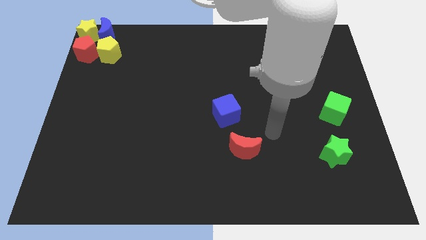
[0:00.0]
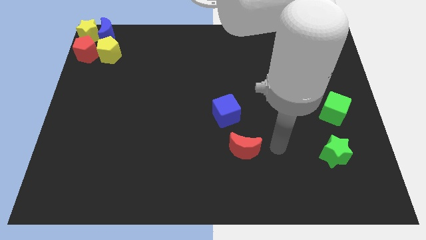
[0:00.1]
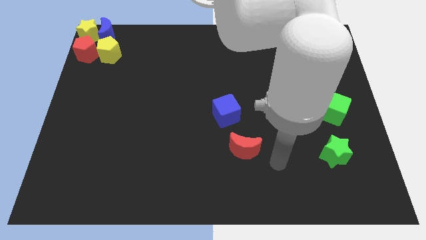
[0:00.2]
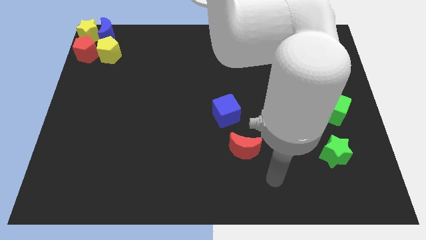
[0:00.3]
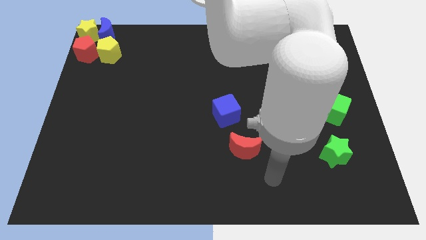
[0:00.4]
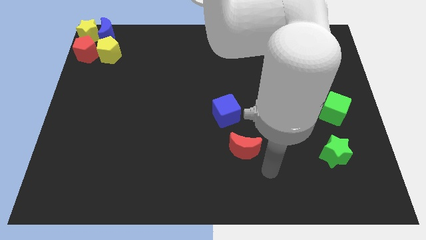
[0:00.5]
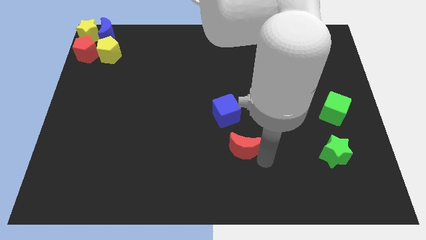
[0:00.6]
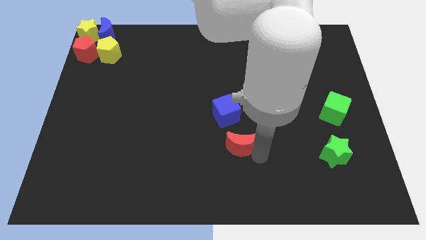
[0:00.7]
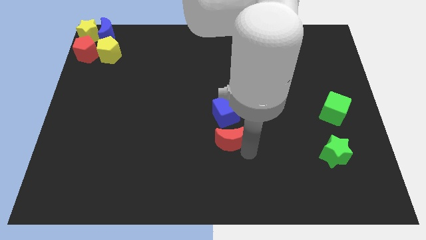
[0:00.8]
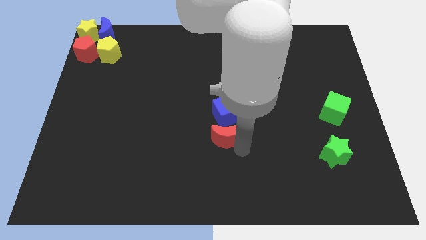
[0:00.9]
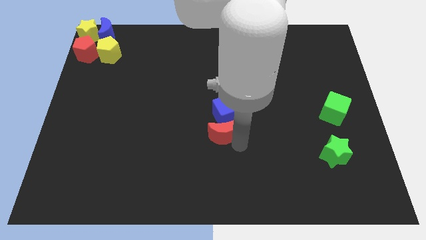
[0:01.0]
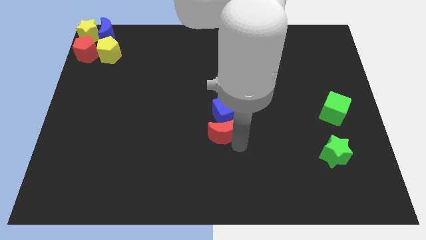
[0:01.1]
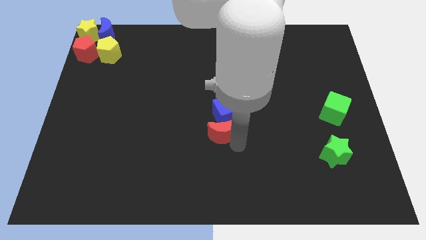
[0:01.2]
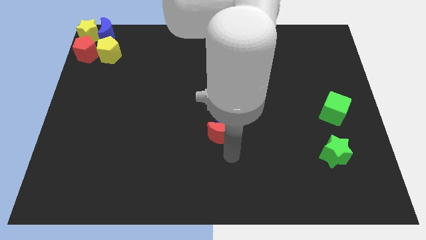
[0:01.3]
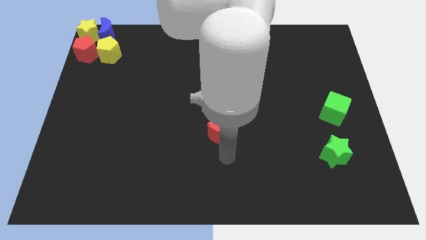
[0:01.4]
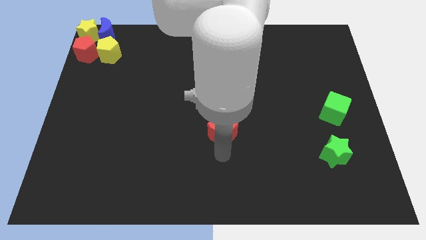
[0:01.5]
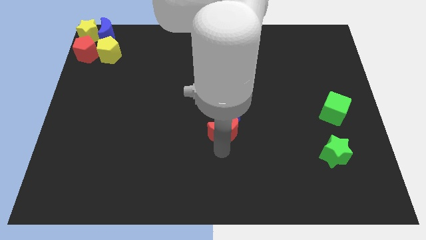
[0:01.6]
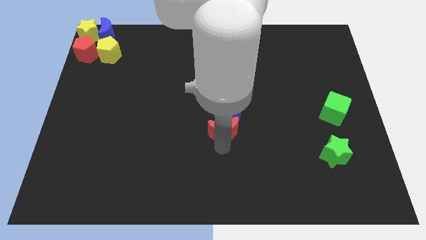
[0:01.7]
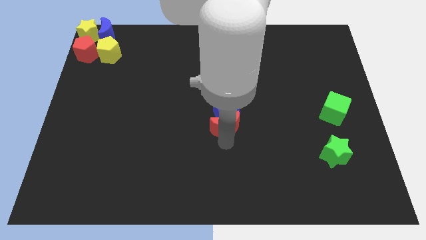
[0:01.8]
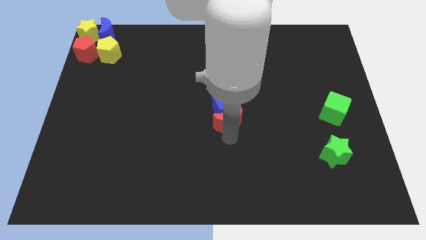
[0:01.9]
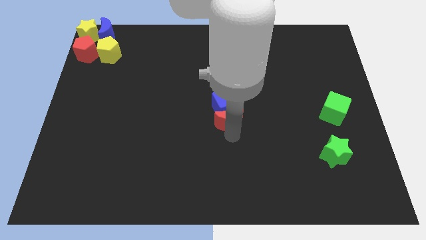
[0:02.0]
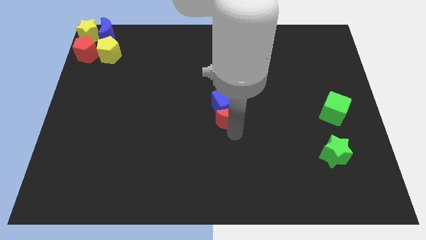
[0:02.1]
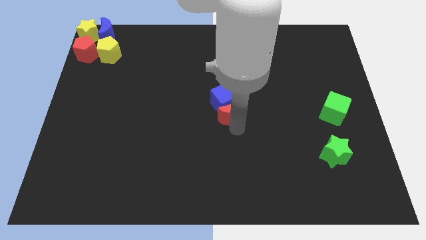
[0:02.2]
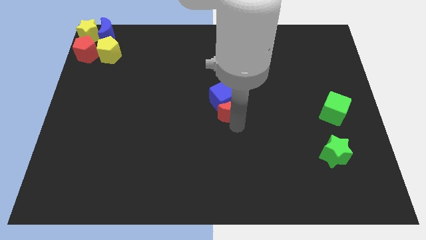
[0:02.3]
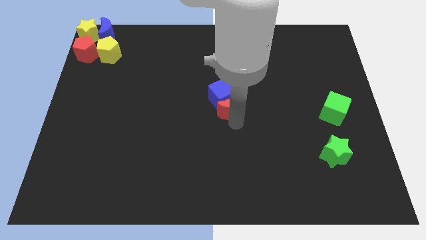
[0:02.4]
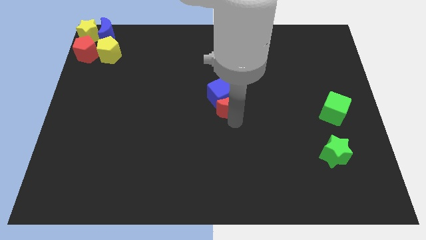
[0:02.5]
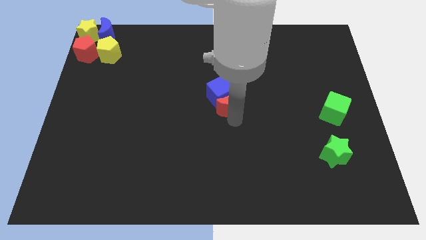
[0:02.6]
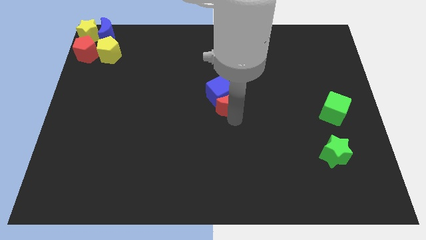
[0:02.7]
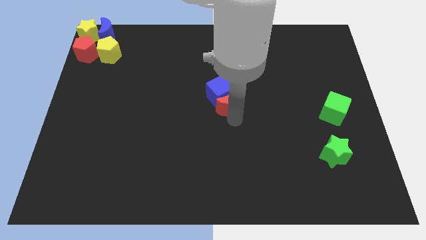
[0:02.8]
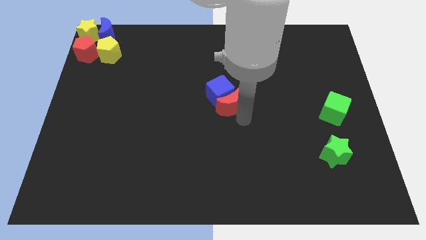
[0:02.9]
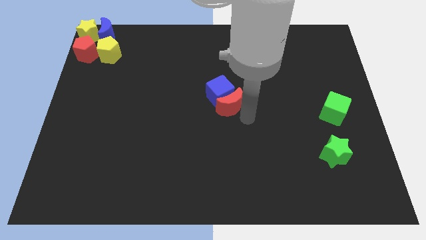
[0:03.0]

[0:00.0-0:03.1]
move red moon into blue cube

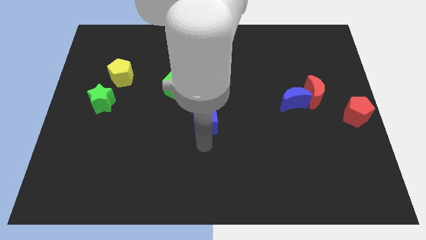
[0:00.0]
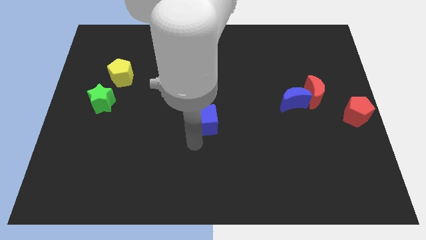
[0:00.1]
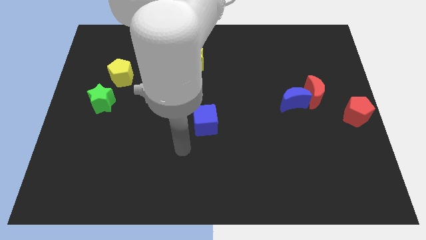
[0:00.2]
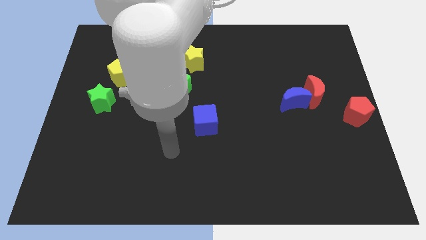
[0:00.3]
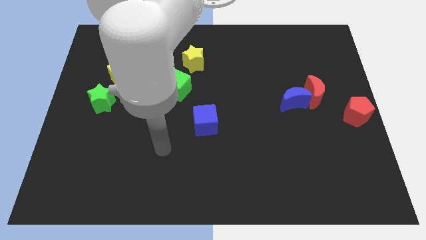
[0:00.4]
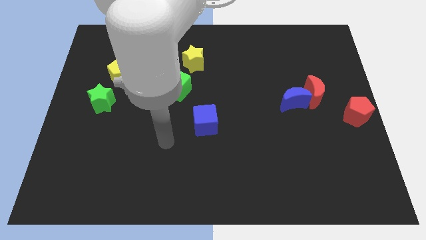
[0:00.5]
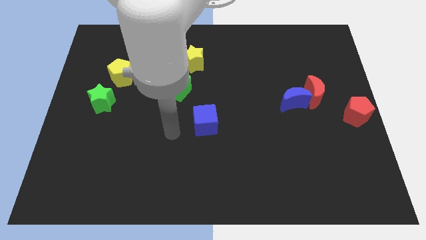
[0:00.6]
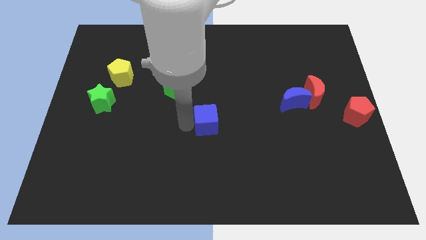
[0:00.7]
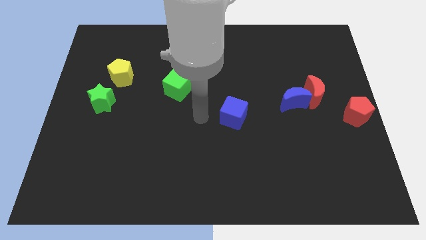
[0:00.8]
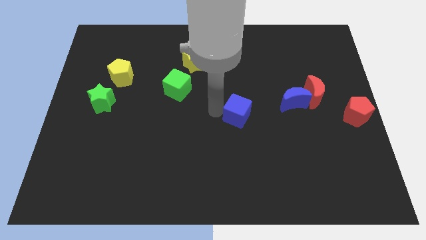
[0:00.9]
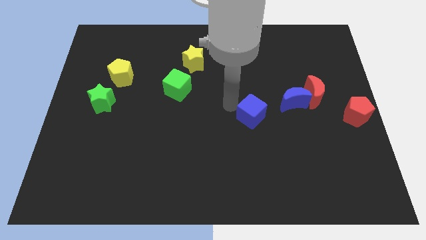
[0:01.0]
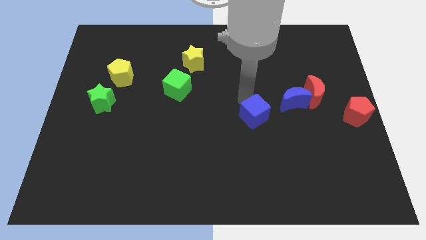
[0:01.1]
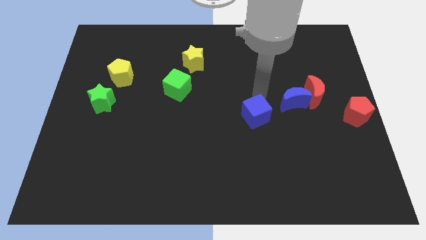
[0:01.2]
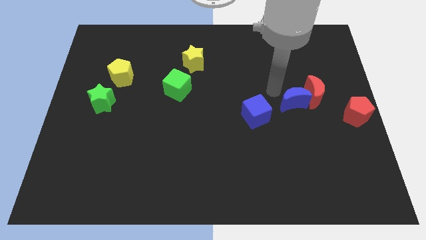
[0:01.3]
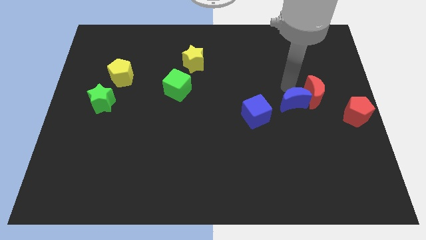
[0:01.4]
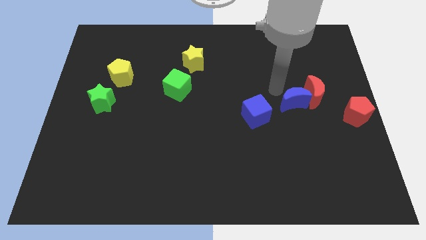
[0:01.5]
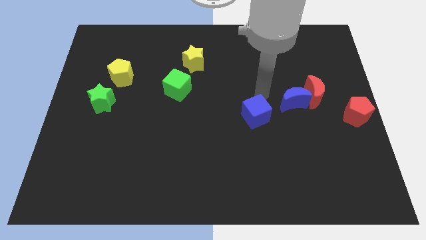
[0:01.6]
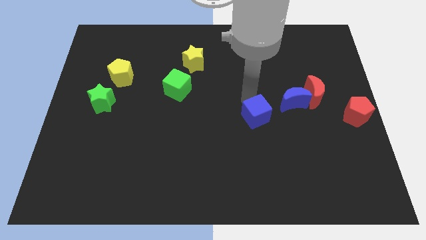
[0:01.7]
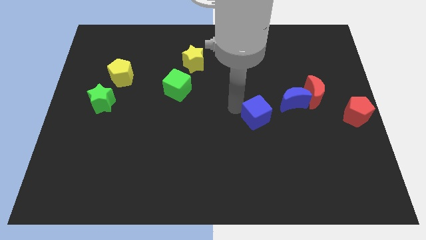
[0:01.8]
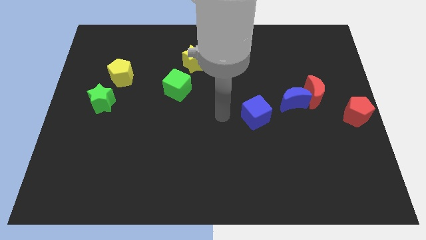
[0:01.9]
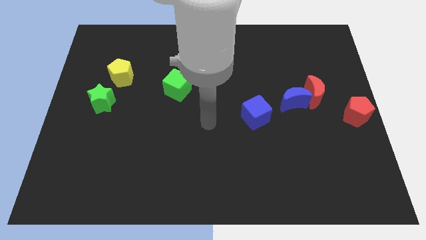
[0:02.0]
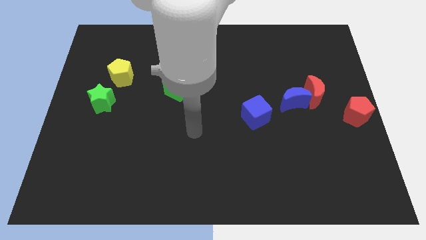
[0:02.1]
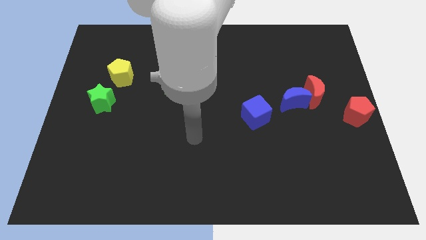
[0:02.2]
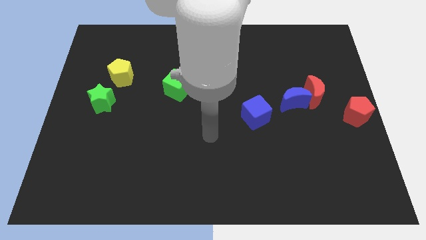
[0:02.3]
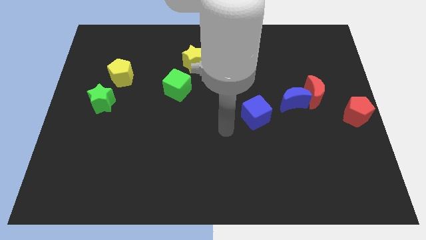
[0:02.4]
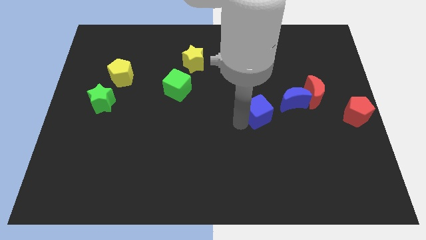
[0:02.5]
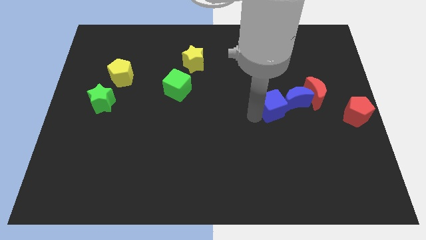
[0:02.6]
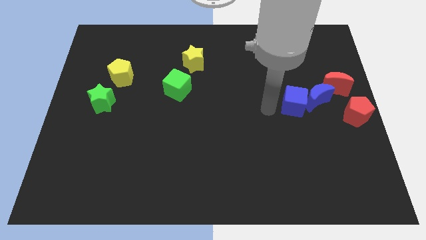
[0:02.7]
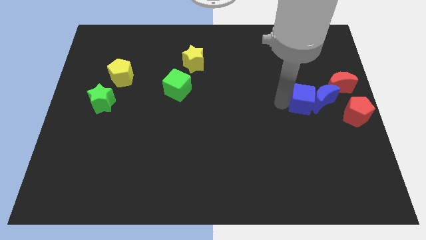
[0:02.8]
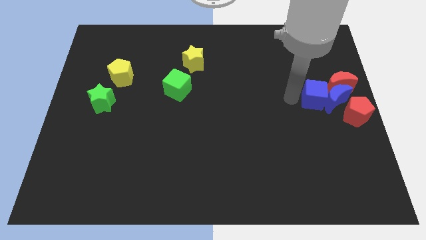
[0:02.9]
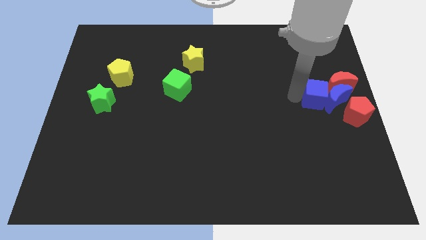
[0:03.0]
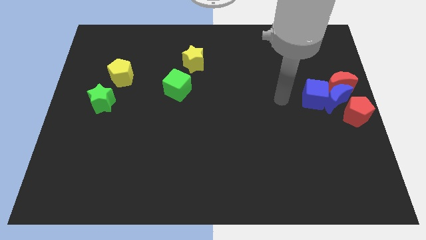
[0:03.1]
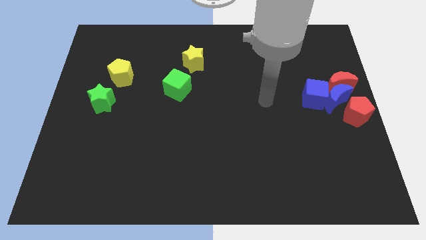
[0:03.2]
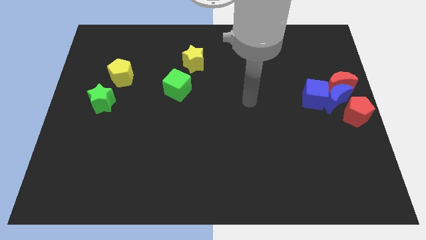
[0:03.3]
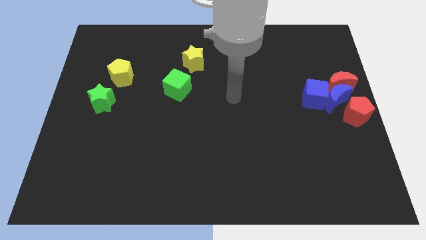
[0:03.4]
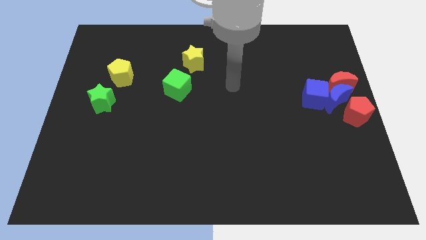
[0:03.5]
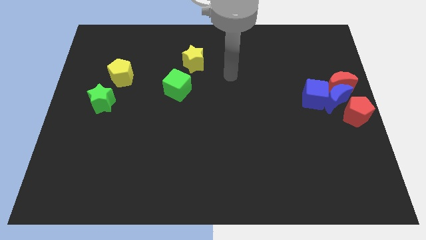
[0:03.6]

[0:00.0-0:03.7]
slide the blue cube into the blue moon and red blocks

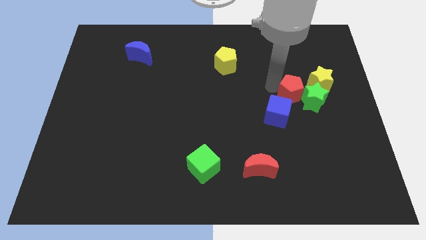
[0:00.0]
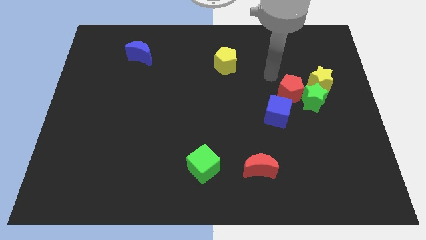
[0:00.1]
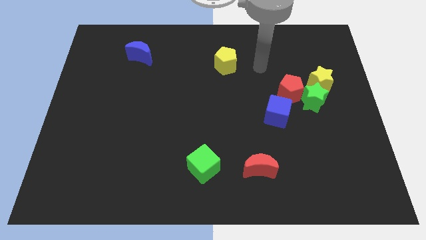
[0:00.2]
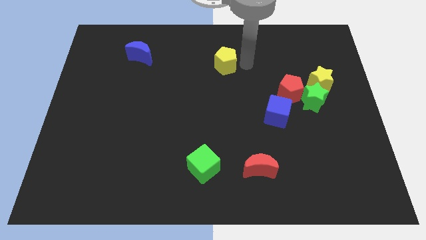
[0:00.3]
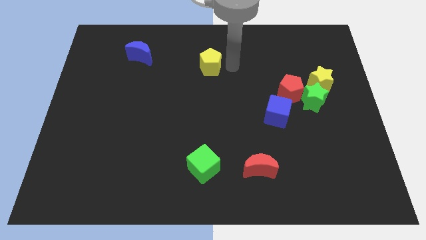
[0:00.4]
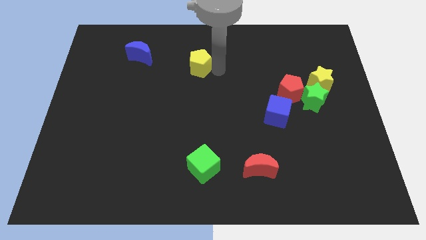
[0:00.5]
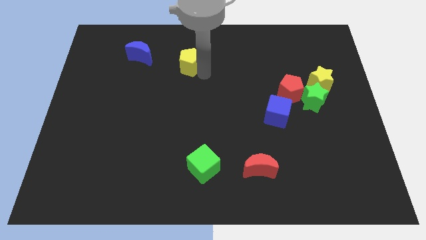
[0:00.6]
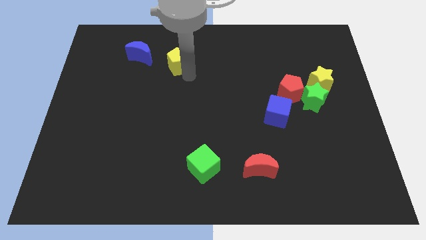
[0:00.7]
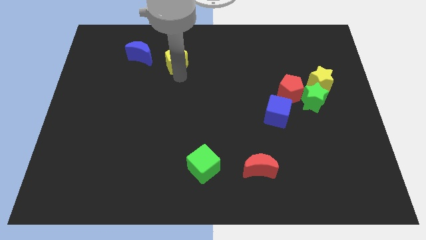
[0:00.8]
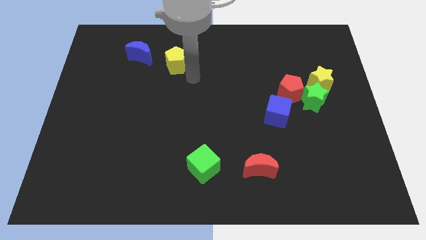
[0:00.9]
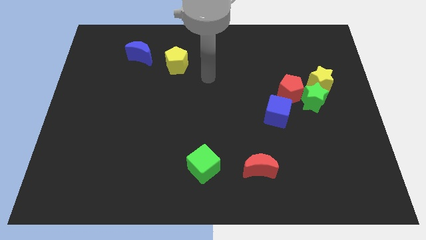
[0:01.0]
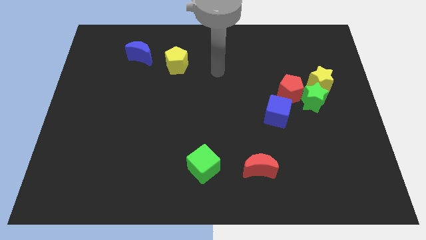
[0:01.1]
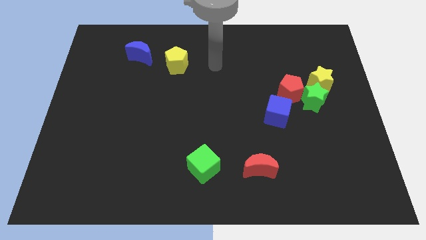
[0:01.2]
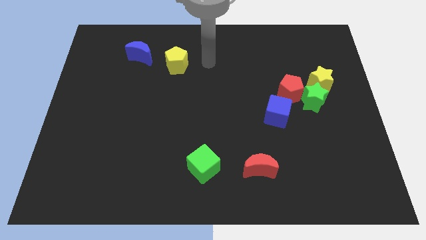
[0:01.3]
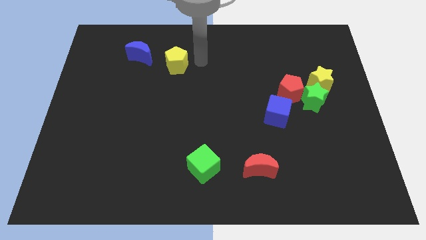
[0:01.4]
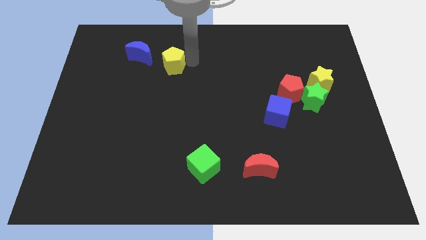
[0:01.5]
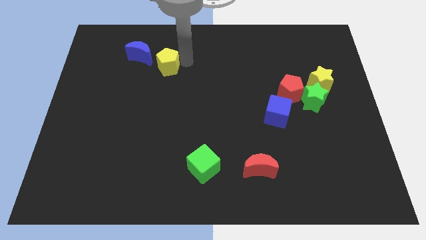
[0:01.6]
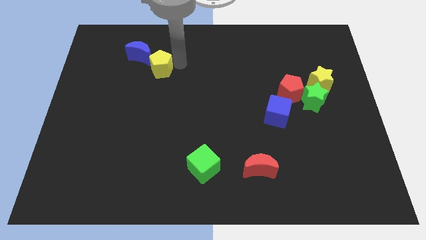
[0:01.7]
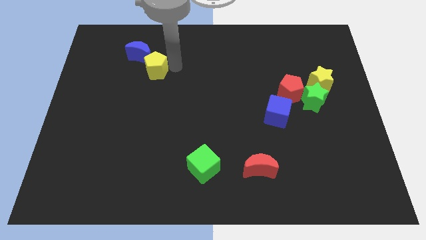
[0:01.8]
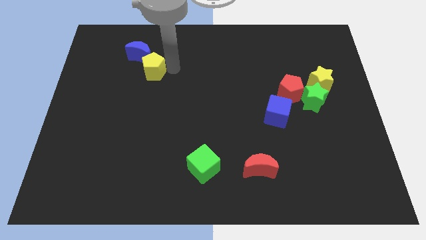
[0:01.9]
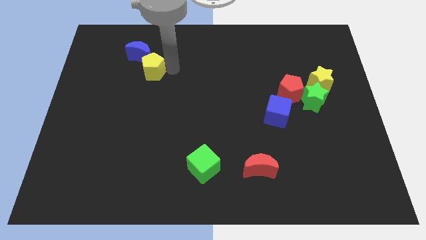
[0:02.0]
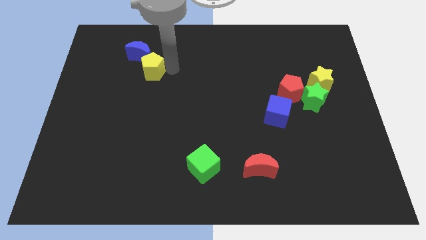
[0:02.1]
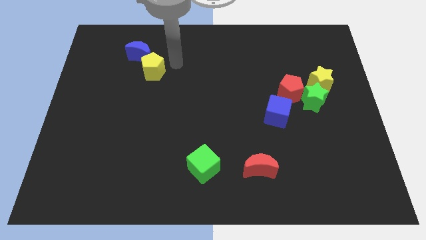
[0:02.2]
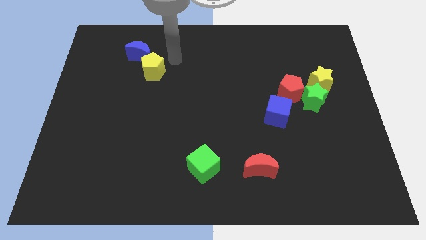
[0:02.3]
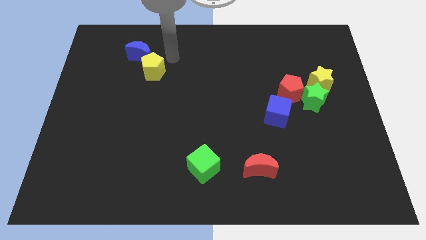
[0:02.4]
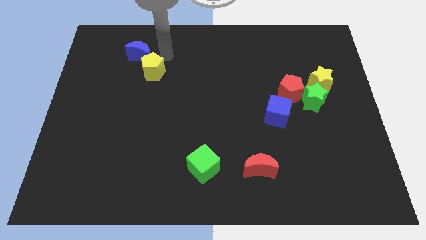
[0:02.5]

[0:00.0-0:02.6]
place the yellow pentagon below the blue crescent
